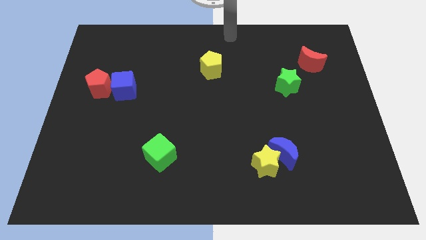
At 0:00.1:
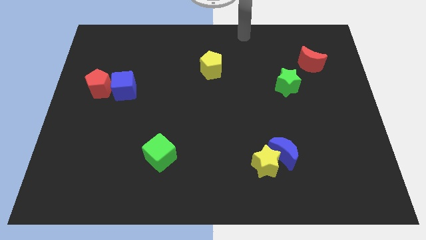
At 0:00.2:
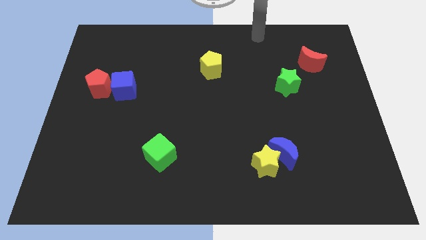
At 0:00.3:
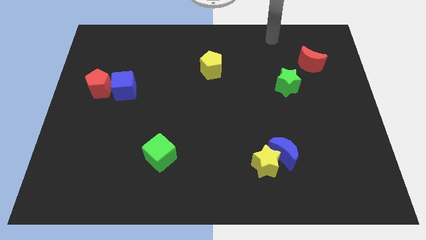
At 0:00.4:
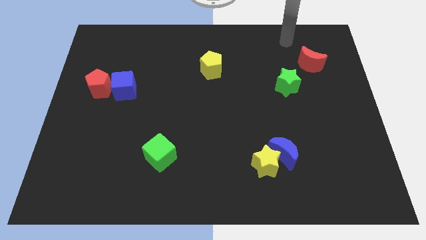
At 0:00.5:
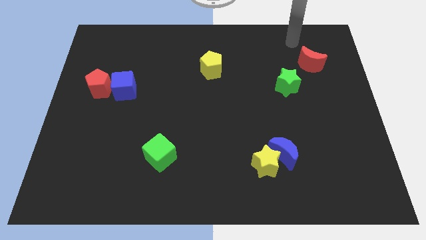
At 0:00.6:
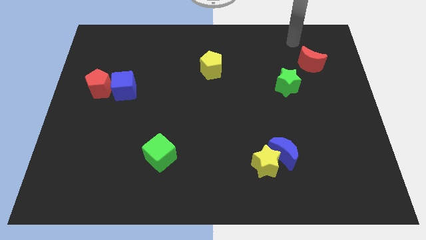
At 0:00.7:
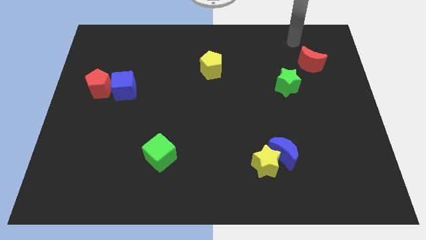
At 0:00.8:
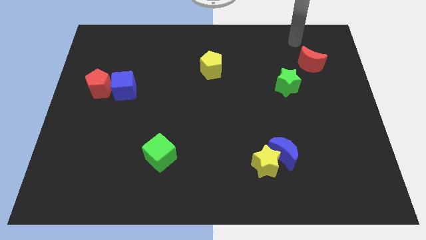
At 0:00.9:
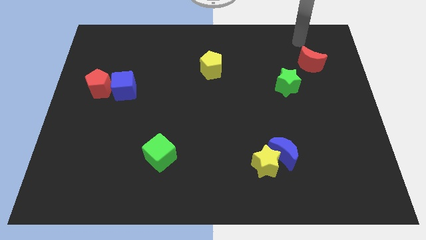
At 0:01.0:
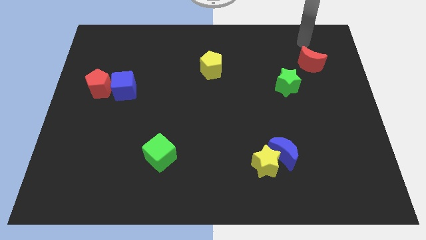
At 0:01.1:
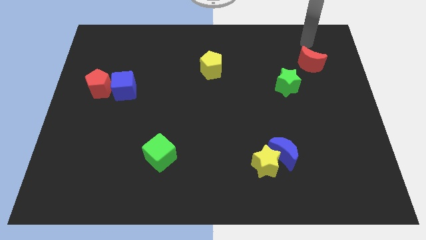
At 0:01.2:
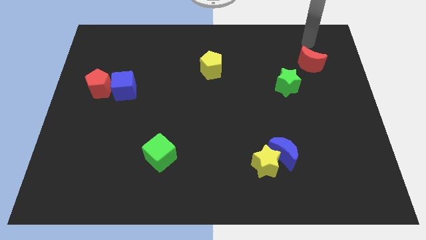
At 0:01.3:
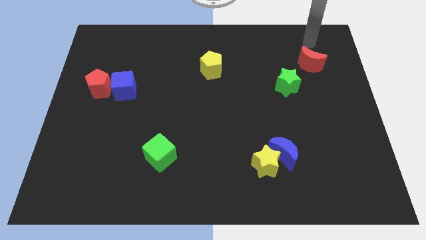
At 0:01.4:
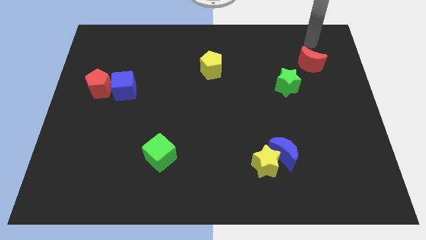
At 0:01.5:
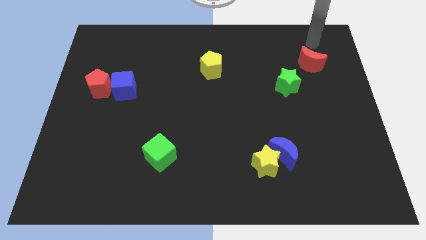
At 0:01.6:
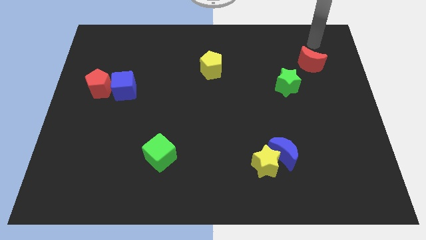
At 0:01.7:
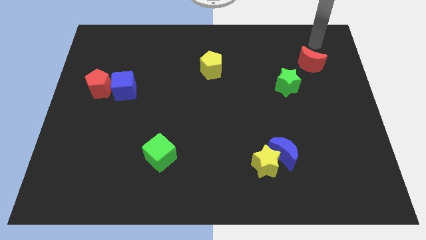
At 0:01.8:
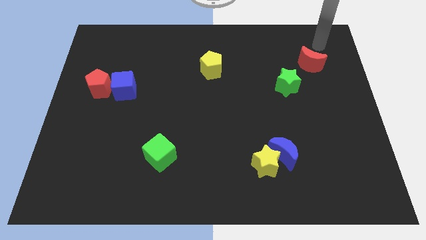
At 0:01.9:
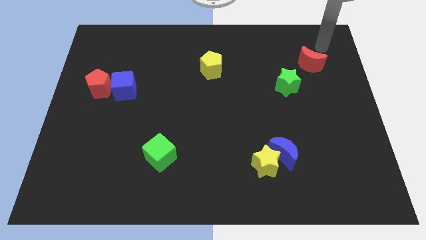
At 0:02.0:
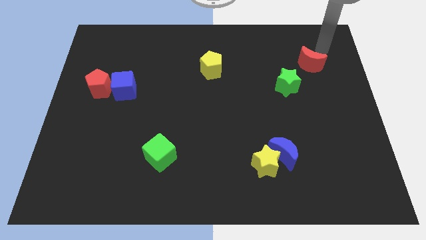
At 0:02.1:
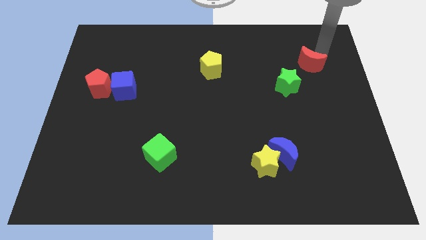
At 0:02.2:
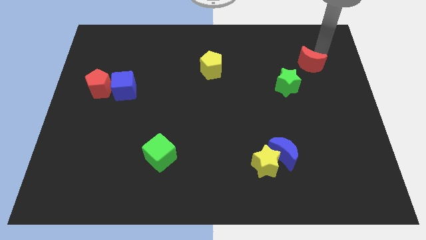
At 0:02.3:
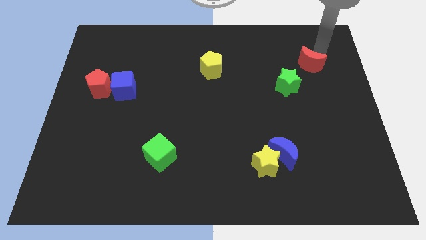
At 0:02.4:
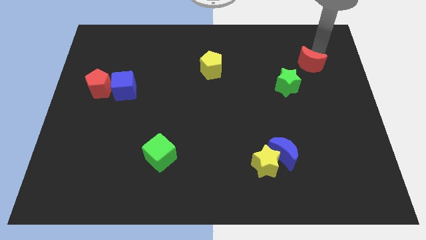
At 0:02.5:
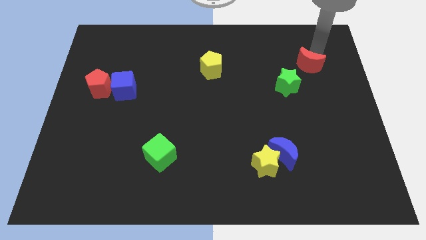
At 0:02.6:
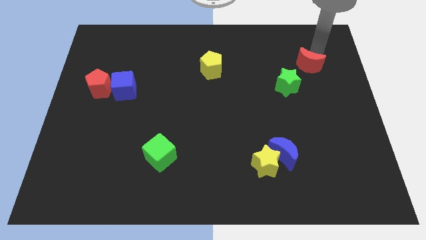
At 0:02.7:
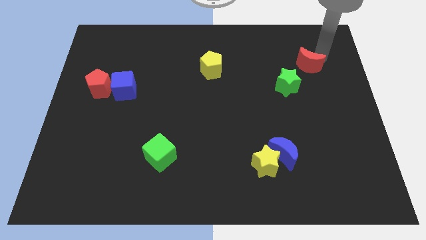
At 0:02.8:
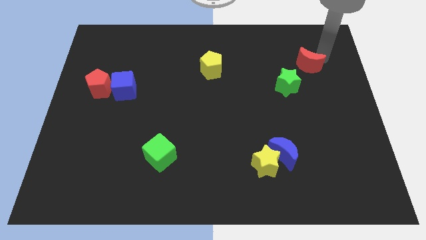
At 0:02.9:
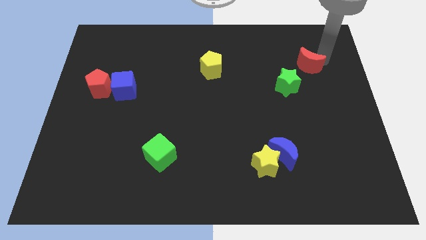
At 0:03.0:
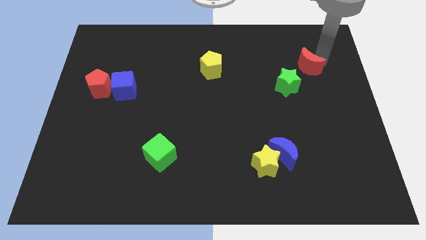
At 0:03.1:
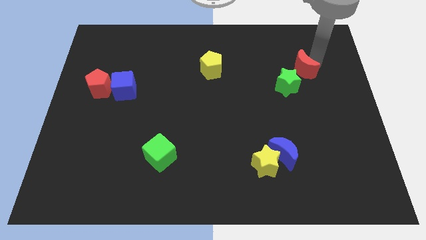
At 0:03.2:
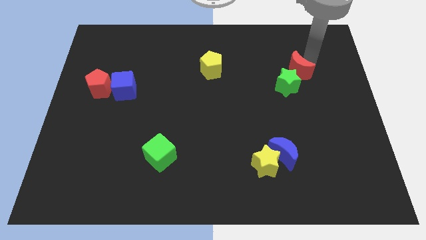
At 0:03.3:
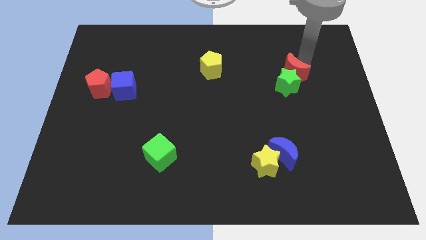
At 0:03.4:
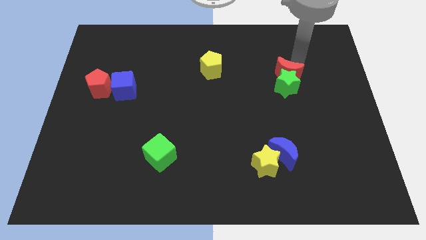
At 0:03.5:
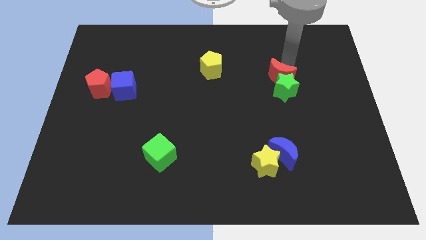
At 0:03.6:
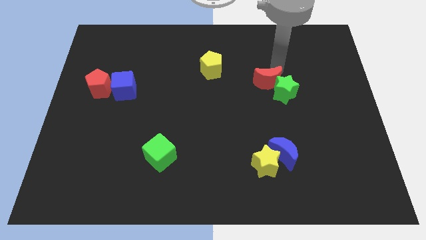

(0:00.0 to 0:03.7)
put the red moon at the top left of the green star

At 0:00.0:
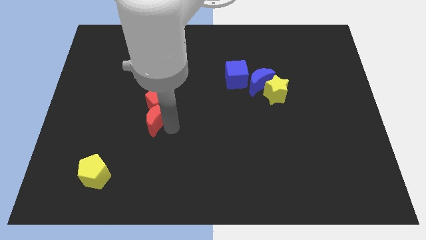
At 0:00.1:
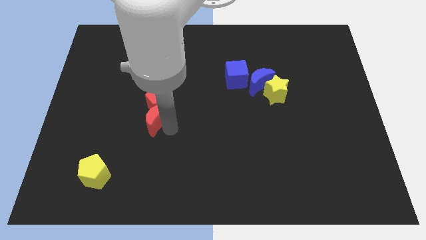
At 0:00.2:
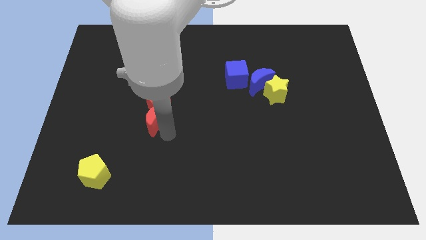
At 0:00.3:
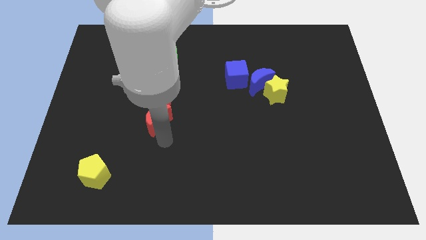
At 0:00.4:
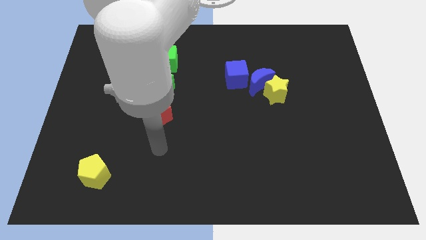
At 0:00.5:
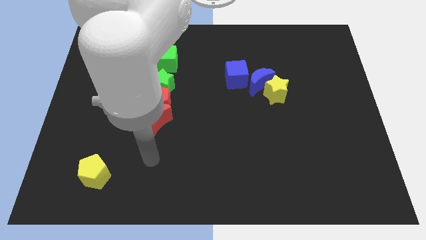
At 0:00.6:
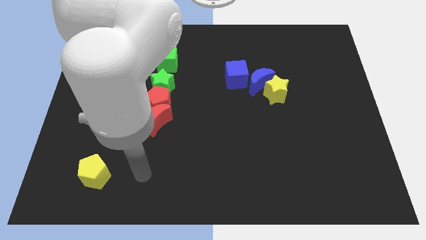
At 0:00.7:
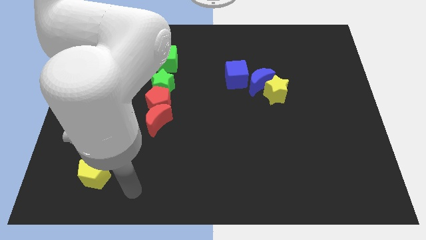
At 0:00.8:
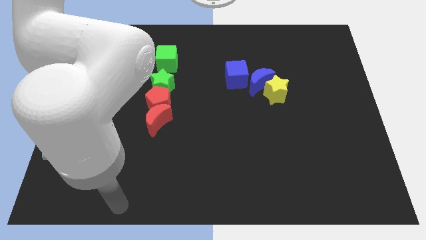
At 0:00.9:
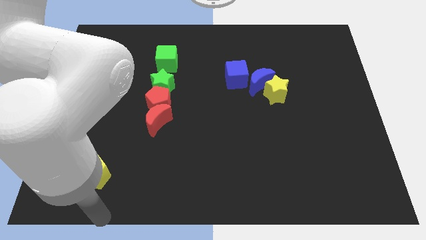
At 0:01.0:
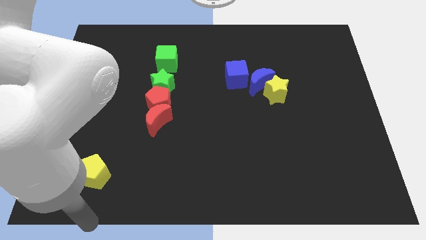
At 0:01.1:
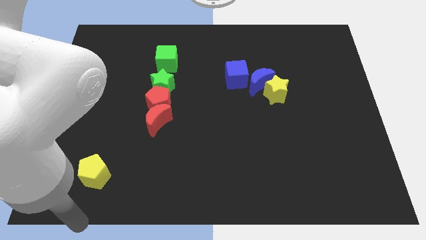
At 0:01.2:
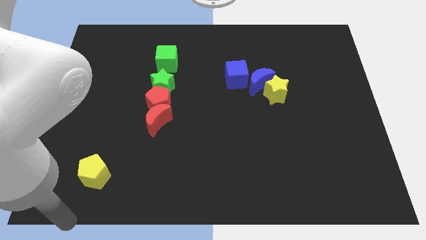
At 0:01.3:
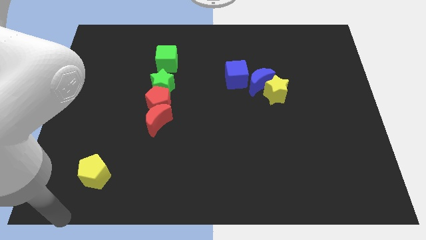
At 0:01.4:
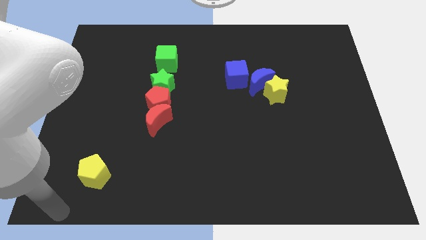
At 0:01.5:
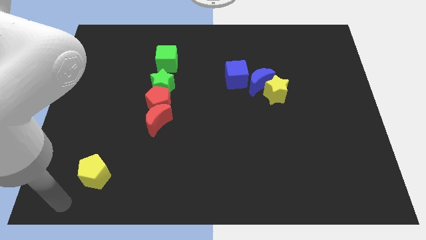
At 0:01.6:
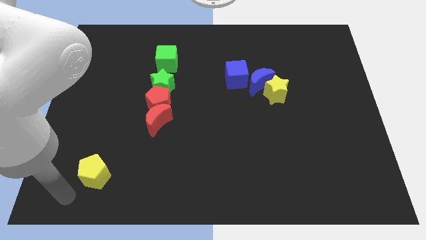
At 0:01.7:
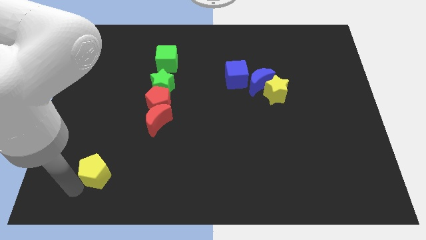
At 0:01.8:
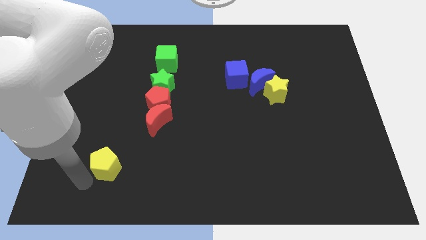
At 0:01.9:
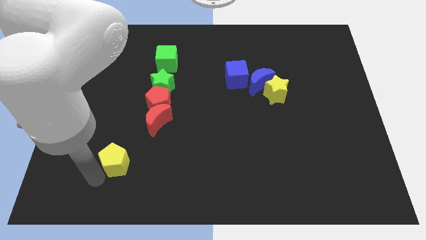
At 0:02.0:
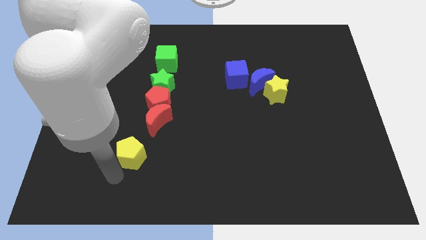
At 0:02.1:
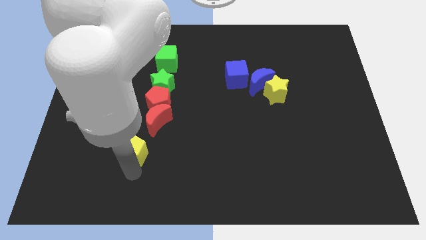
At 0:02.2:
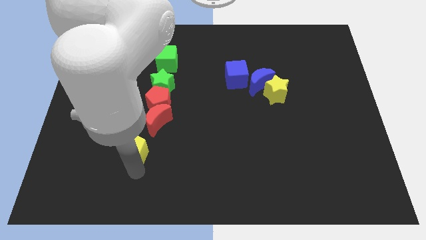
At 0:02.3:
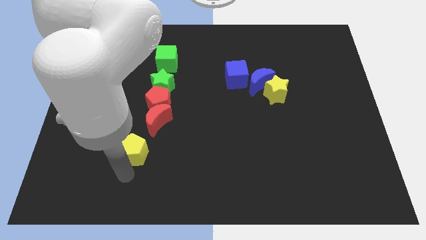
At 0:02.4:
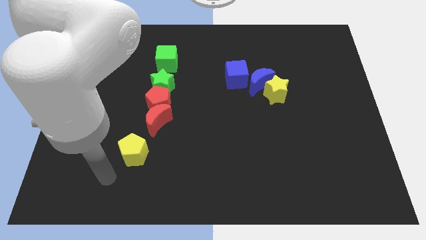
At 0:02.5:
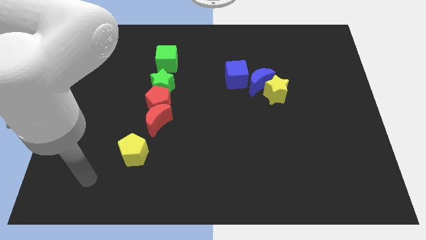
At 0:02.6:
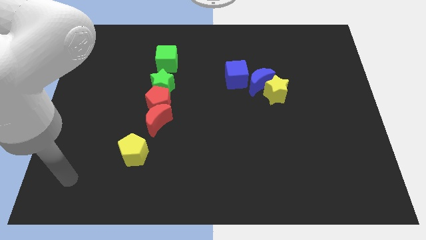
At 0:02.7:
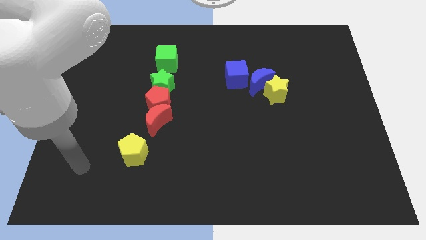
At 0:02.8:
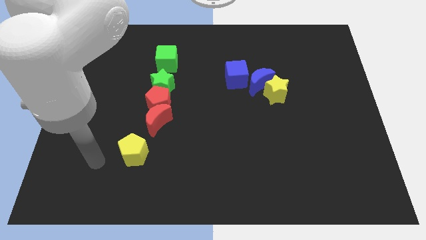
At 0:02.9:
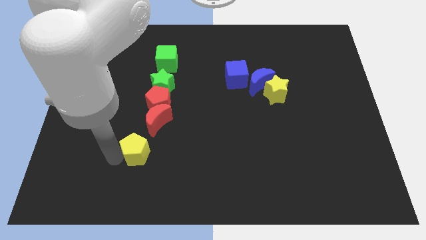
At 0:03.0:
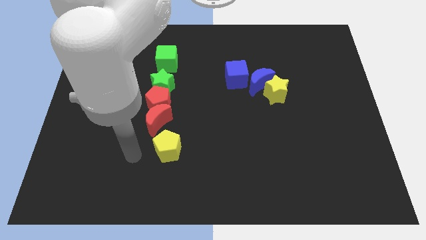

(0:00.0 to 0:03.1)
place the yellow pentagon vertically below the red crescent

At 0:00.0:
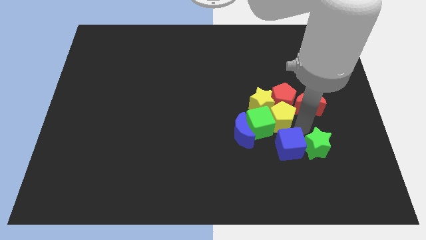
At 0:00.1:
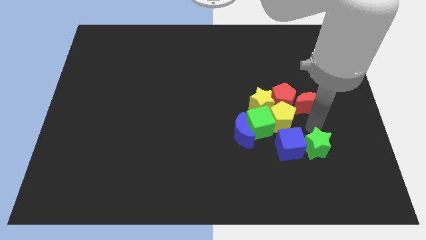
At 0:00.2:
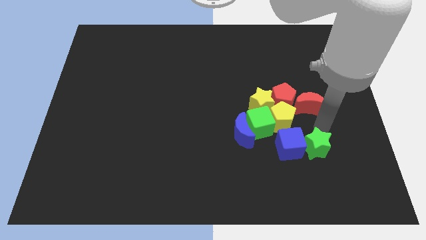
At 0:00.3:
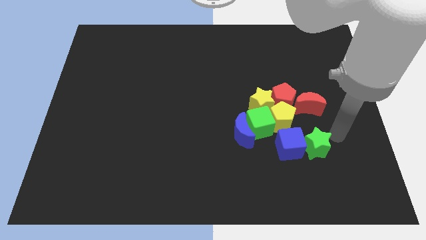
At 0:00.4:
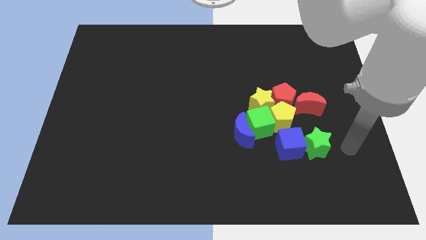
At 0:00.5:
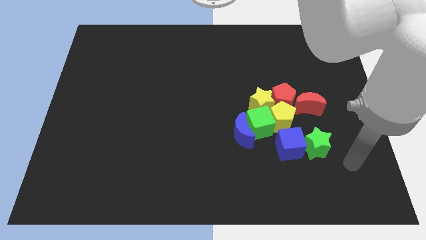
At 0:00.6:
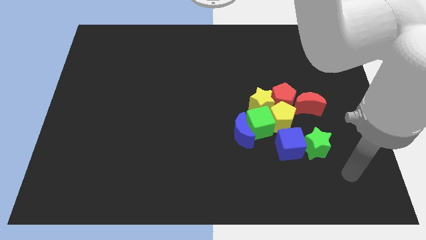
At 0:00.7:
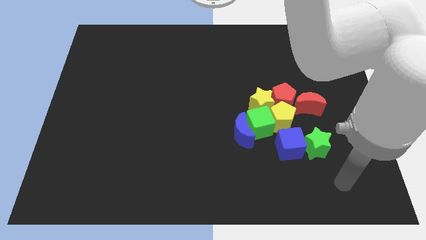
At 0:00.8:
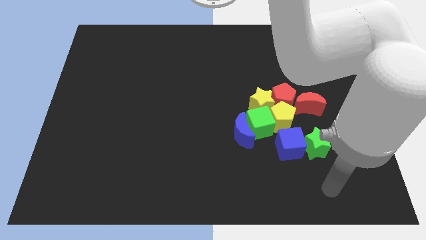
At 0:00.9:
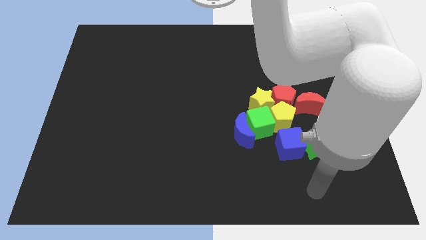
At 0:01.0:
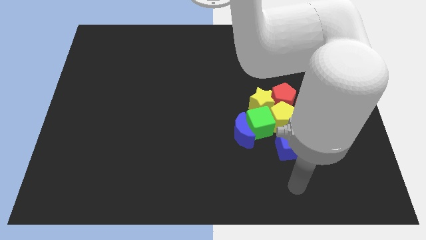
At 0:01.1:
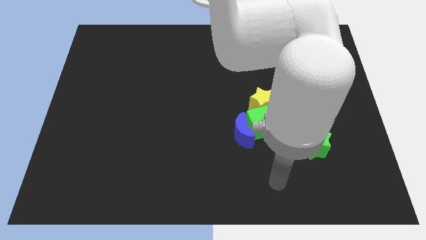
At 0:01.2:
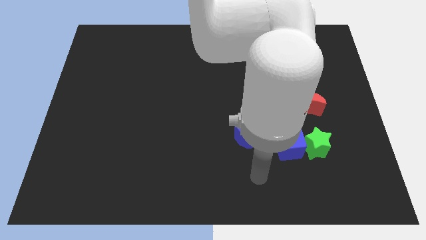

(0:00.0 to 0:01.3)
move your arm away from the yellow pentagon

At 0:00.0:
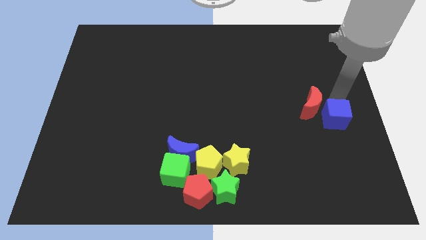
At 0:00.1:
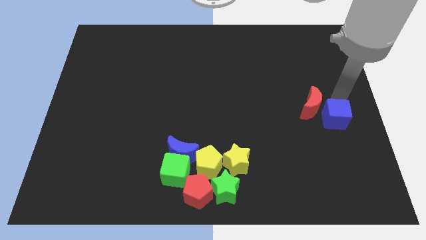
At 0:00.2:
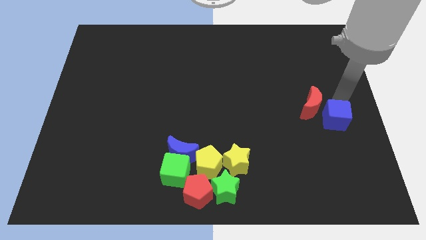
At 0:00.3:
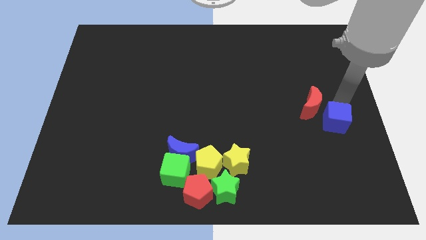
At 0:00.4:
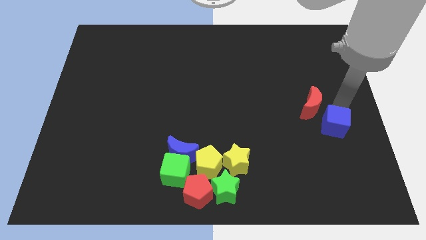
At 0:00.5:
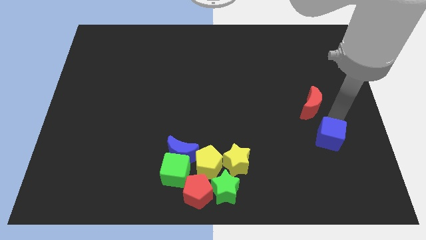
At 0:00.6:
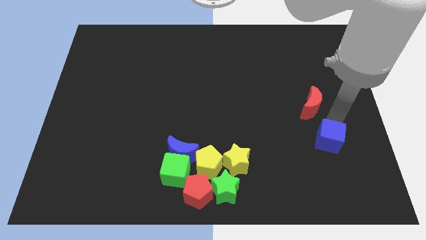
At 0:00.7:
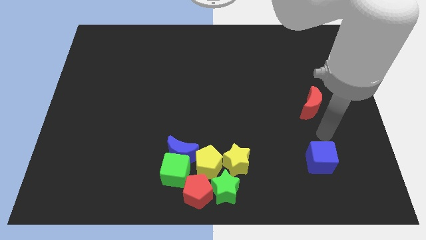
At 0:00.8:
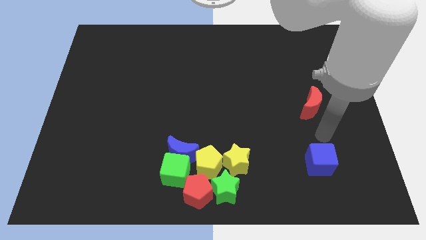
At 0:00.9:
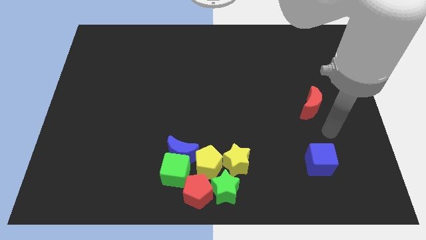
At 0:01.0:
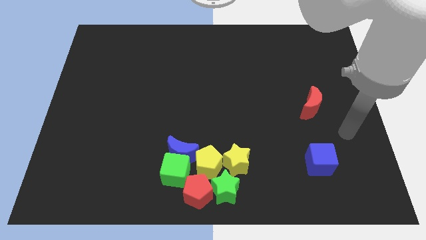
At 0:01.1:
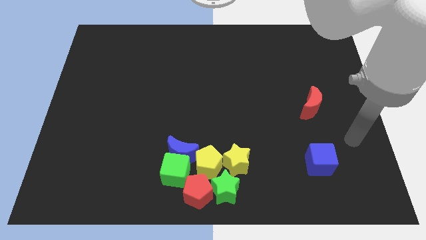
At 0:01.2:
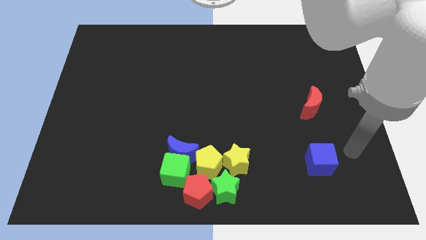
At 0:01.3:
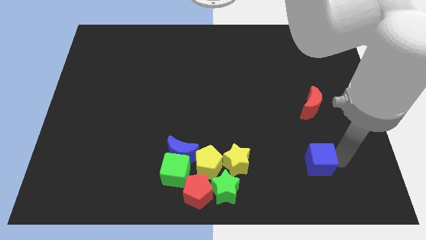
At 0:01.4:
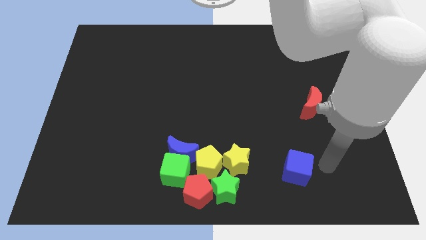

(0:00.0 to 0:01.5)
move the blue cube horizontally right to the yellow star
